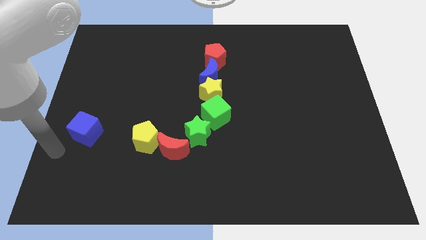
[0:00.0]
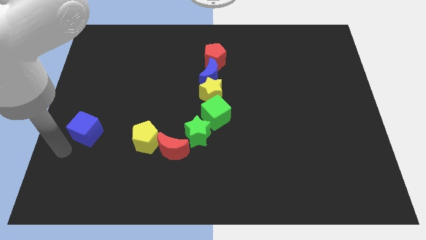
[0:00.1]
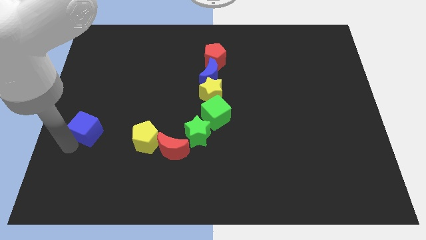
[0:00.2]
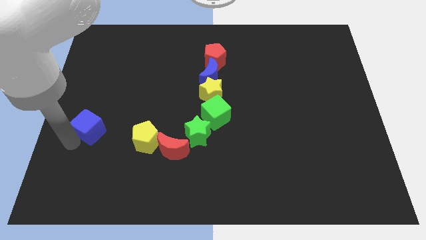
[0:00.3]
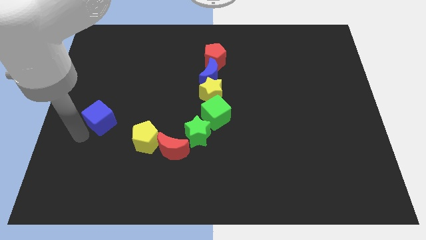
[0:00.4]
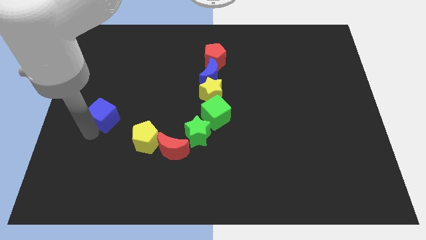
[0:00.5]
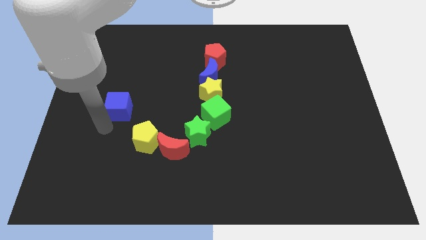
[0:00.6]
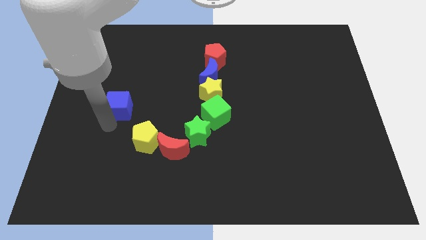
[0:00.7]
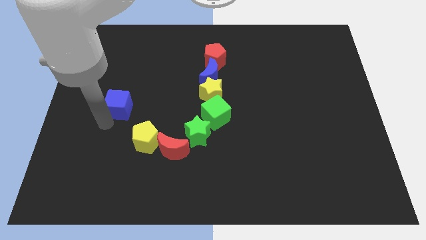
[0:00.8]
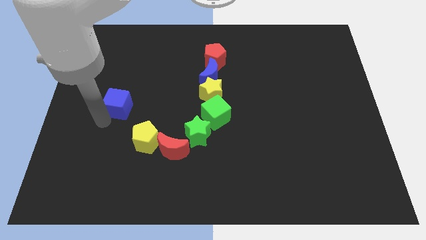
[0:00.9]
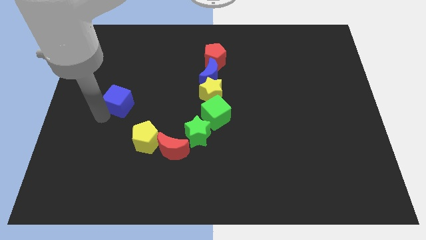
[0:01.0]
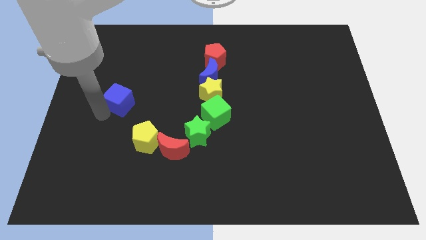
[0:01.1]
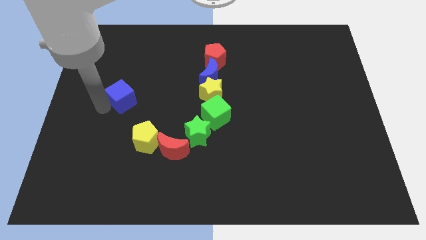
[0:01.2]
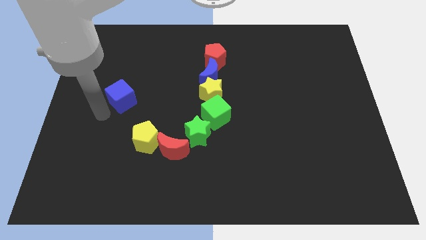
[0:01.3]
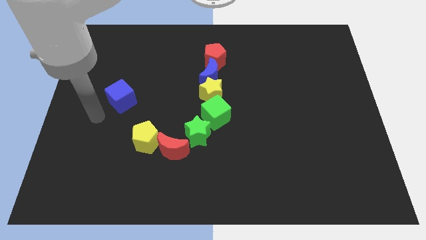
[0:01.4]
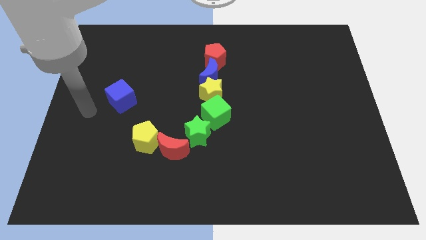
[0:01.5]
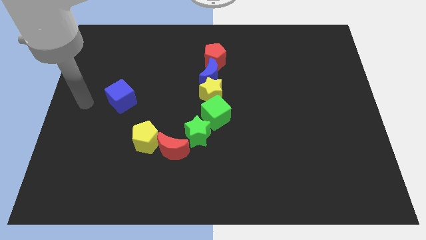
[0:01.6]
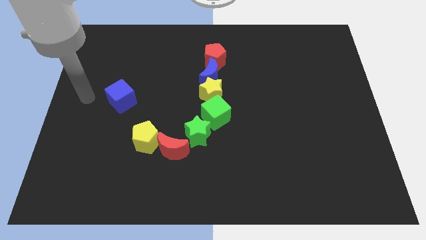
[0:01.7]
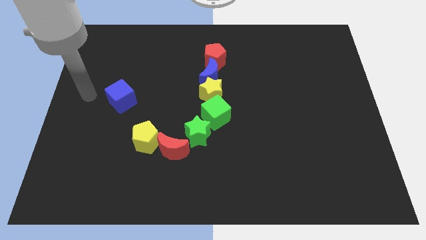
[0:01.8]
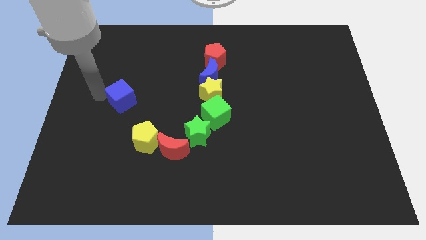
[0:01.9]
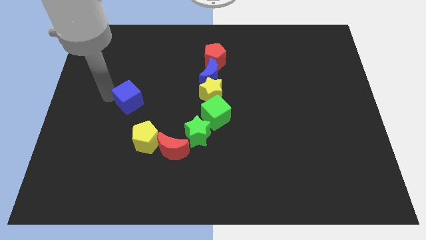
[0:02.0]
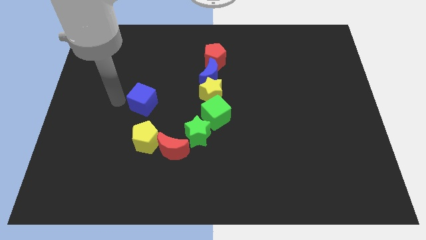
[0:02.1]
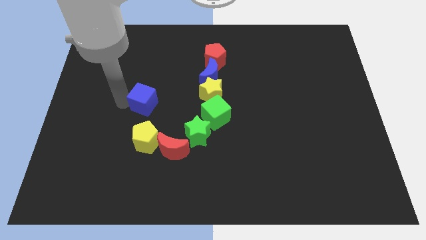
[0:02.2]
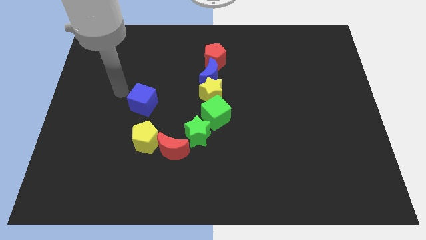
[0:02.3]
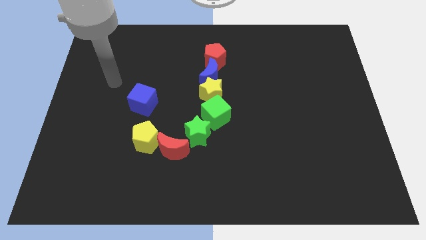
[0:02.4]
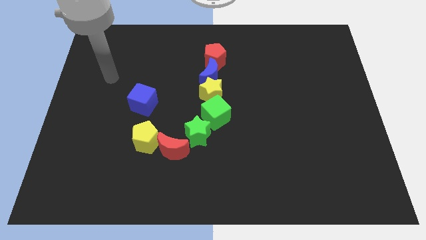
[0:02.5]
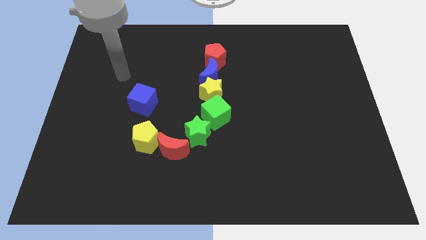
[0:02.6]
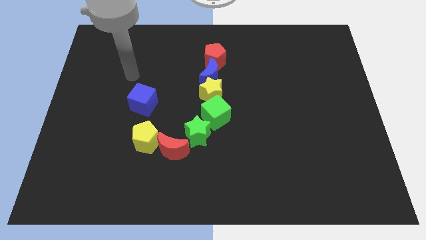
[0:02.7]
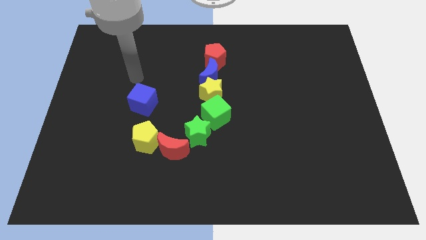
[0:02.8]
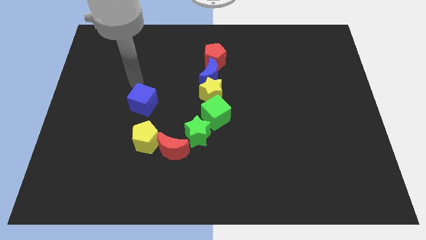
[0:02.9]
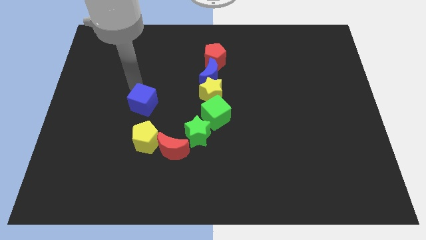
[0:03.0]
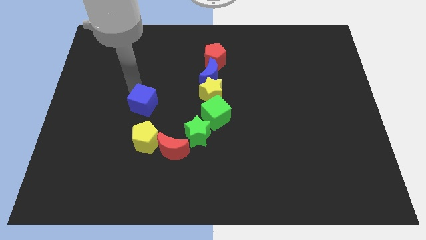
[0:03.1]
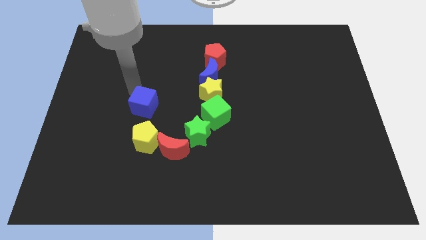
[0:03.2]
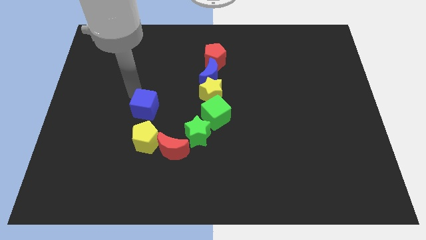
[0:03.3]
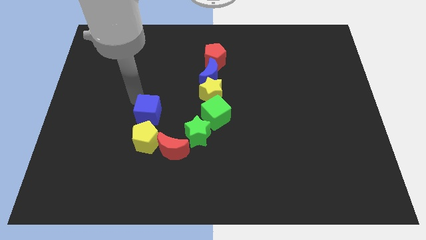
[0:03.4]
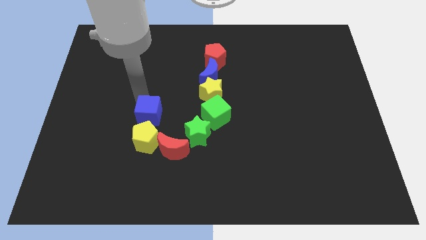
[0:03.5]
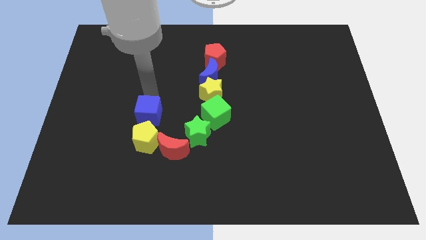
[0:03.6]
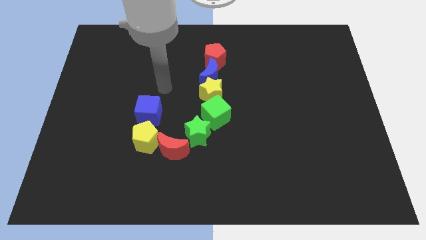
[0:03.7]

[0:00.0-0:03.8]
place blue cube above the yellow pentagon

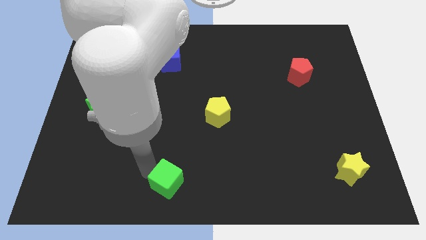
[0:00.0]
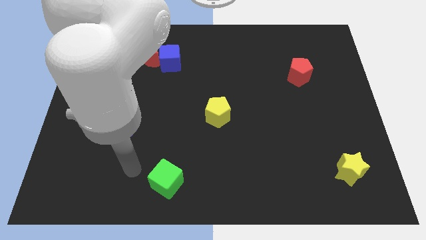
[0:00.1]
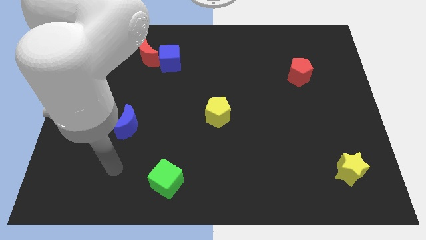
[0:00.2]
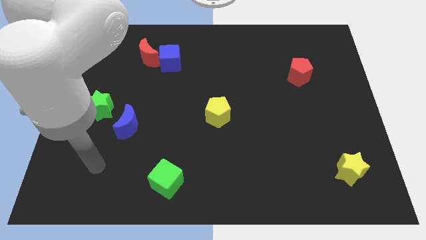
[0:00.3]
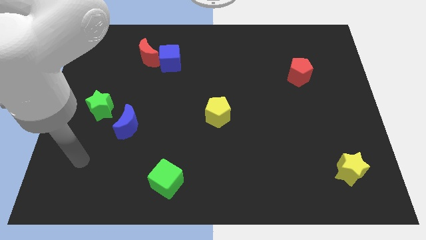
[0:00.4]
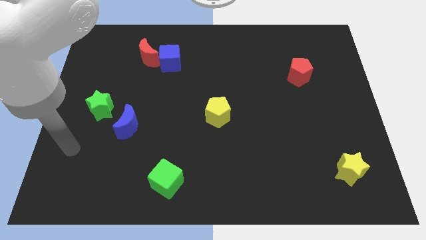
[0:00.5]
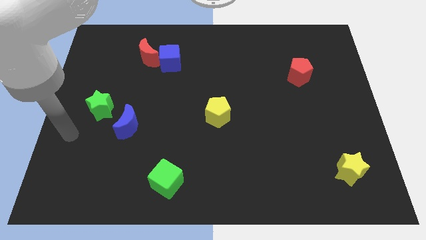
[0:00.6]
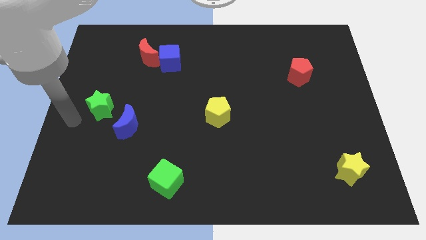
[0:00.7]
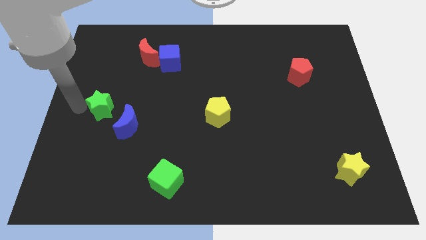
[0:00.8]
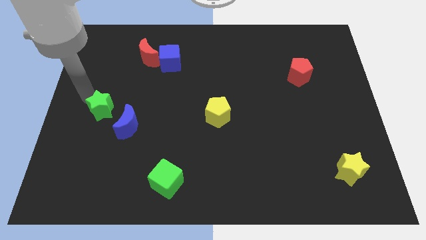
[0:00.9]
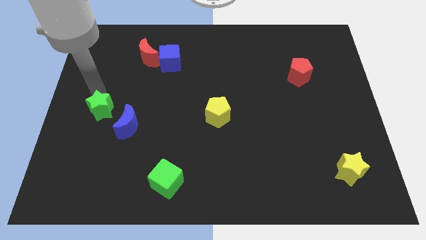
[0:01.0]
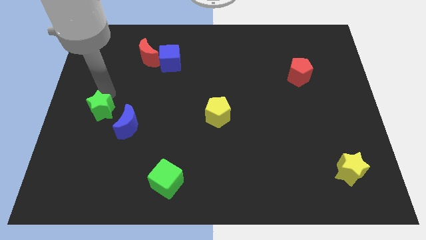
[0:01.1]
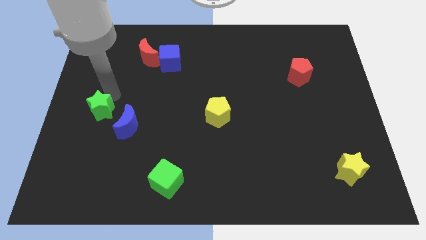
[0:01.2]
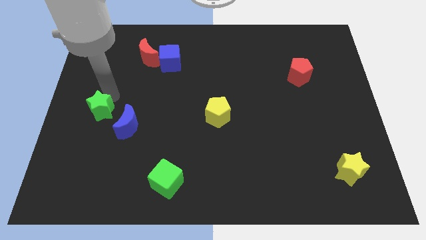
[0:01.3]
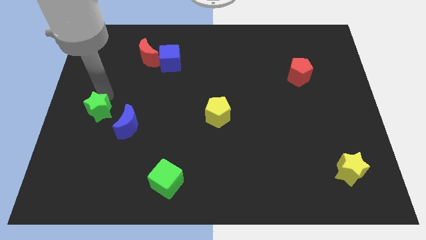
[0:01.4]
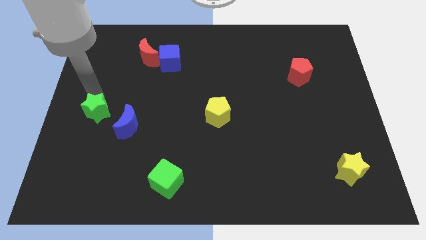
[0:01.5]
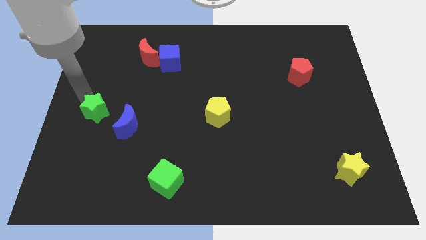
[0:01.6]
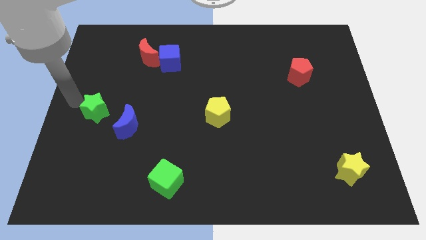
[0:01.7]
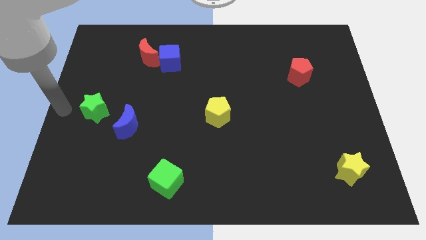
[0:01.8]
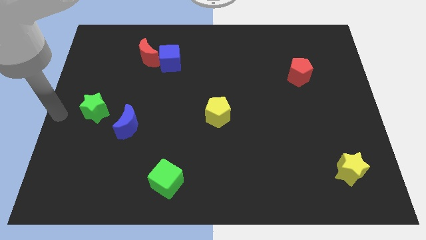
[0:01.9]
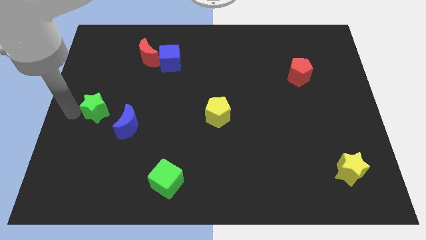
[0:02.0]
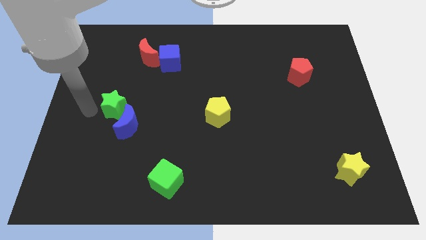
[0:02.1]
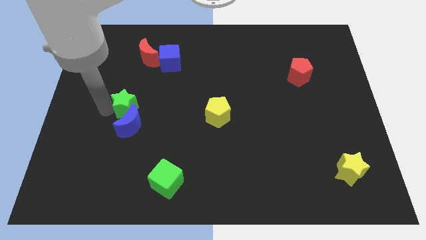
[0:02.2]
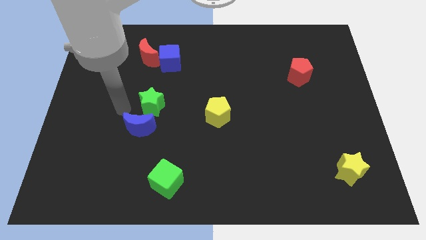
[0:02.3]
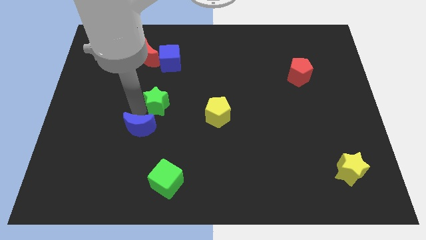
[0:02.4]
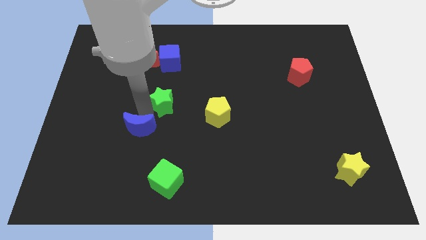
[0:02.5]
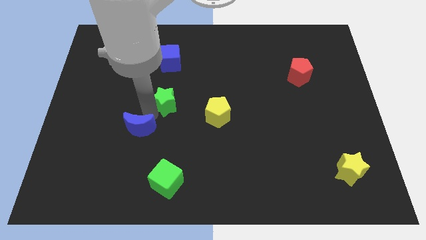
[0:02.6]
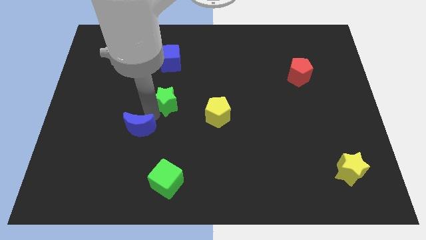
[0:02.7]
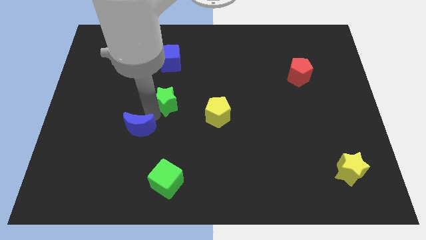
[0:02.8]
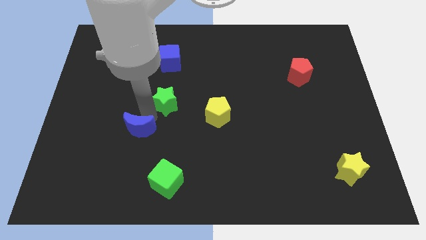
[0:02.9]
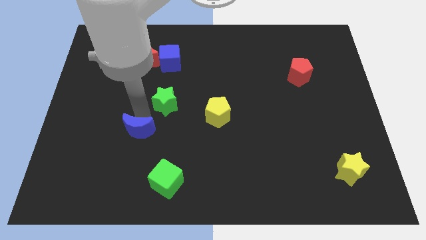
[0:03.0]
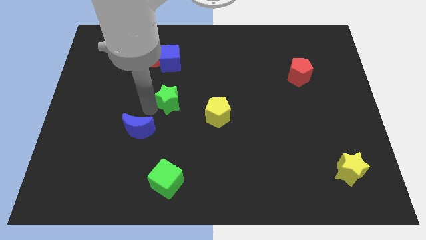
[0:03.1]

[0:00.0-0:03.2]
place the green star vertically below the blue cube

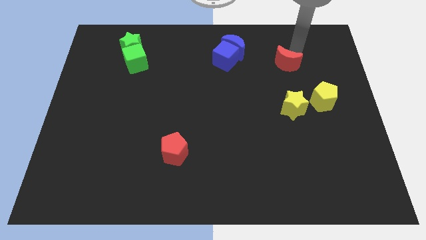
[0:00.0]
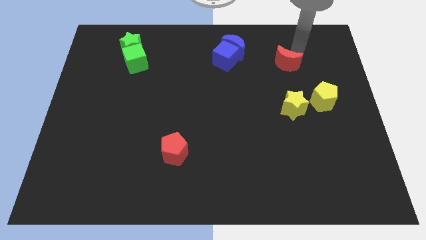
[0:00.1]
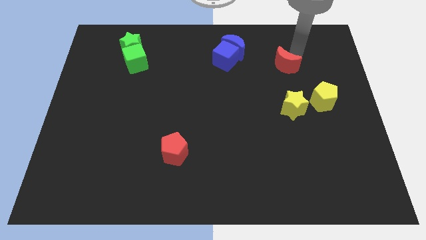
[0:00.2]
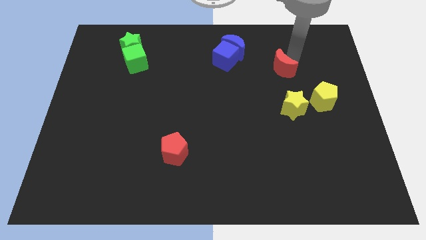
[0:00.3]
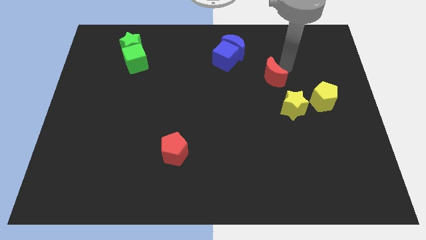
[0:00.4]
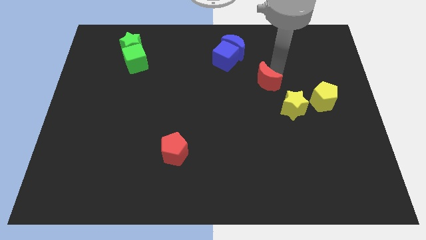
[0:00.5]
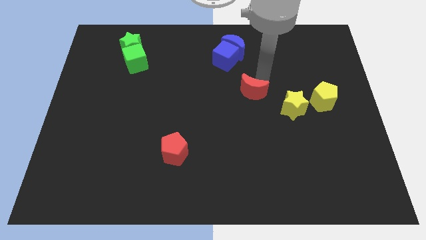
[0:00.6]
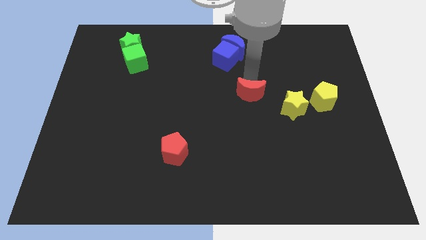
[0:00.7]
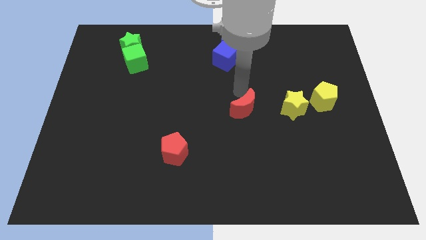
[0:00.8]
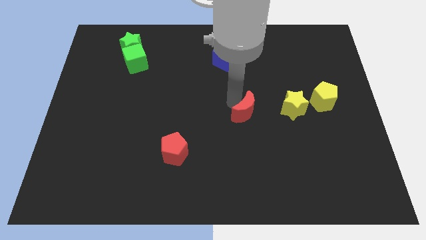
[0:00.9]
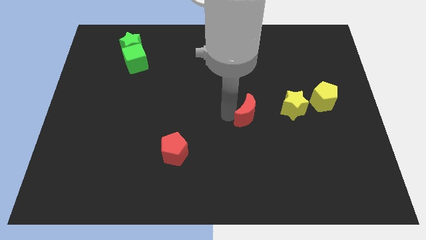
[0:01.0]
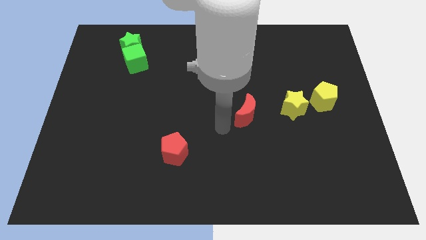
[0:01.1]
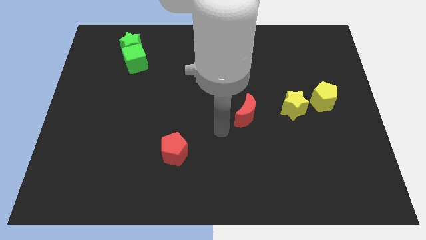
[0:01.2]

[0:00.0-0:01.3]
push the red crescent to the left of the yellow blocks

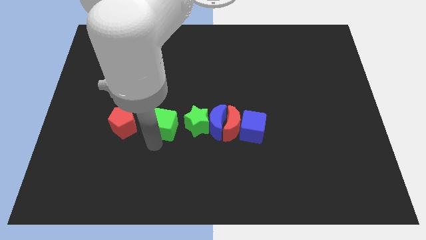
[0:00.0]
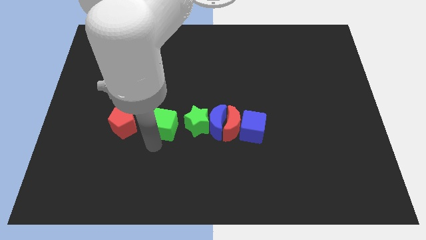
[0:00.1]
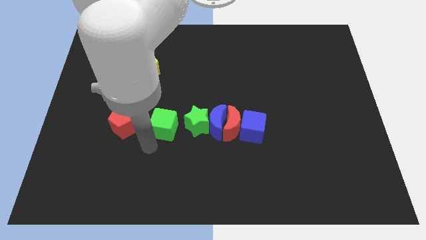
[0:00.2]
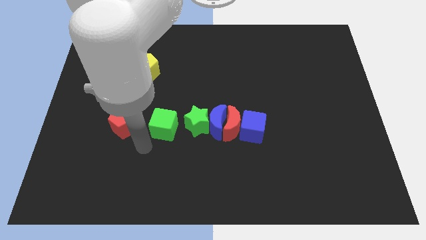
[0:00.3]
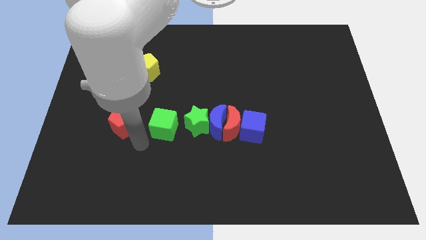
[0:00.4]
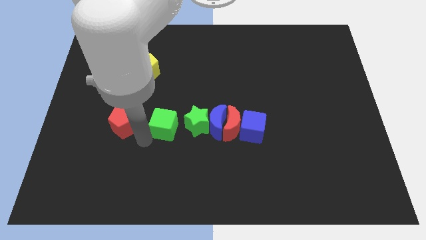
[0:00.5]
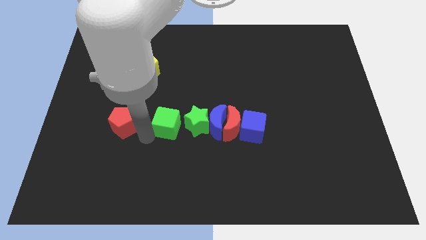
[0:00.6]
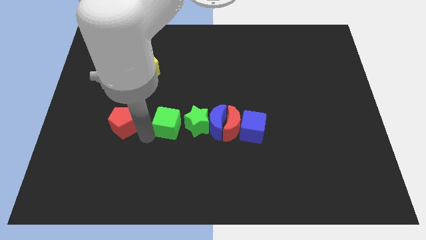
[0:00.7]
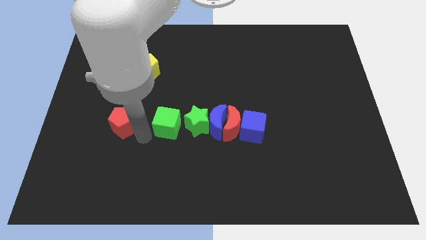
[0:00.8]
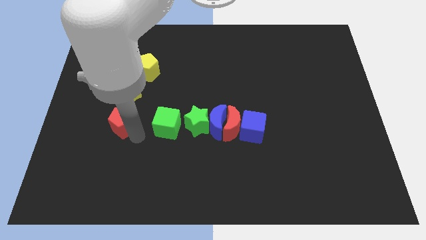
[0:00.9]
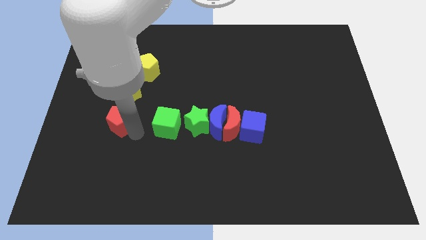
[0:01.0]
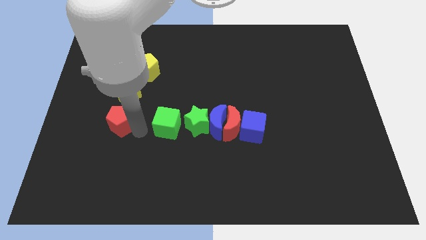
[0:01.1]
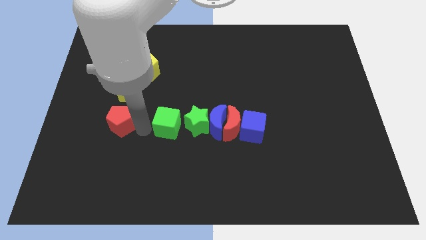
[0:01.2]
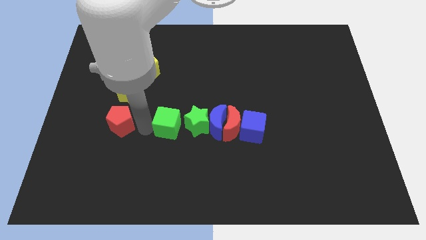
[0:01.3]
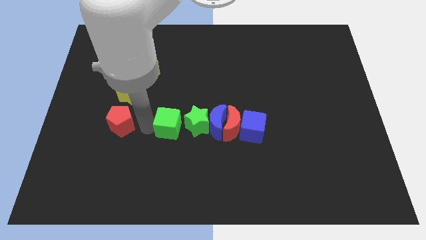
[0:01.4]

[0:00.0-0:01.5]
place the arm between the green cube and red pentagon
